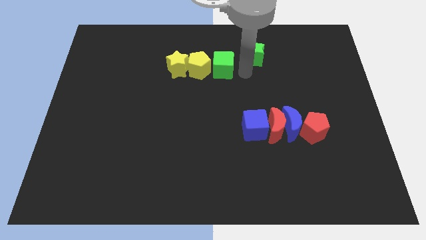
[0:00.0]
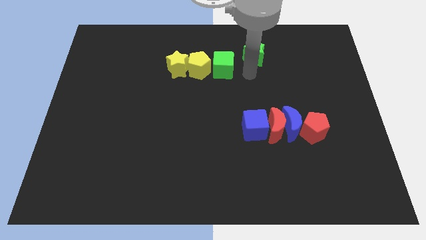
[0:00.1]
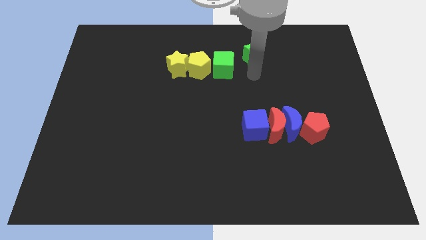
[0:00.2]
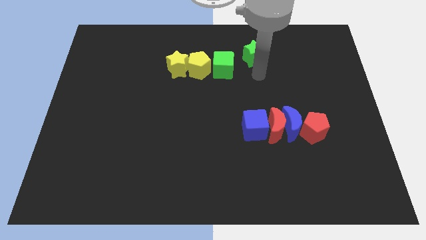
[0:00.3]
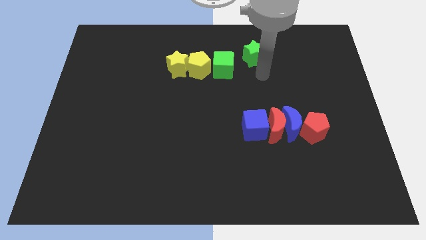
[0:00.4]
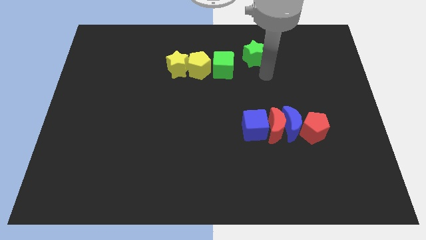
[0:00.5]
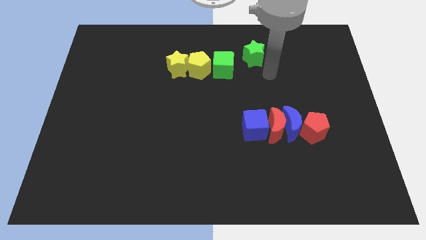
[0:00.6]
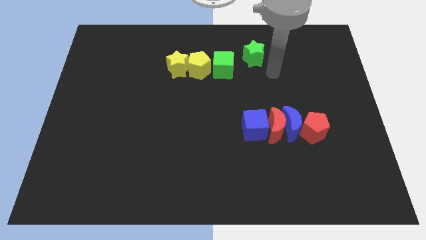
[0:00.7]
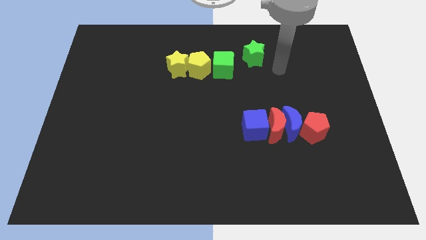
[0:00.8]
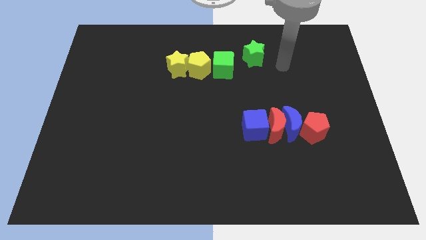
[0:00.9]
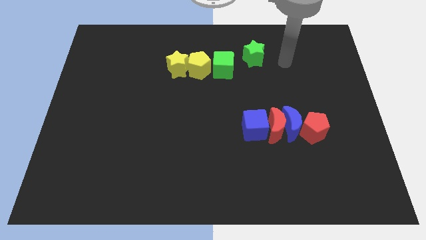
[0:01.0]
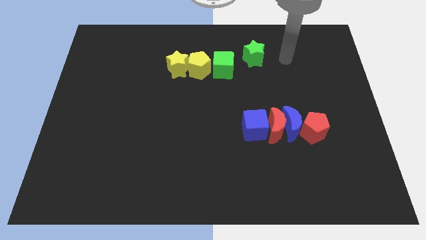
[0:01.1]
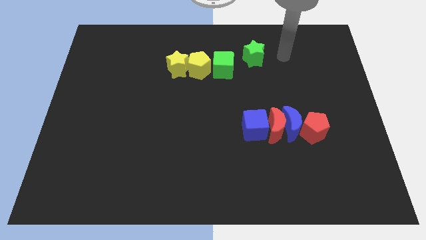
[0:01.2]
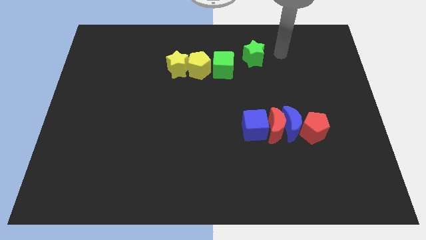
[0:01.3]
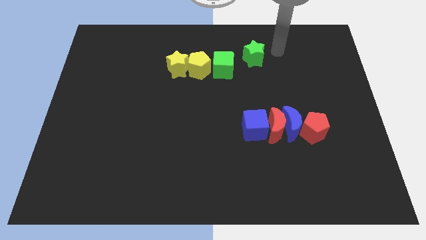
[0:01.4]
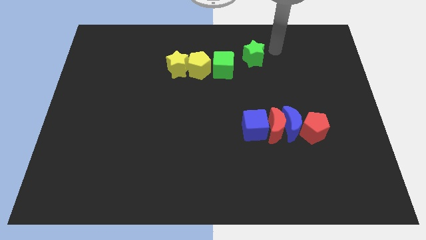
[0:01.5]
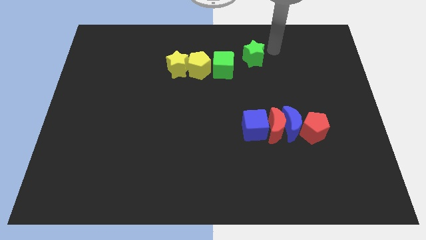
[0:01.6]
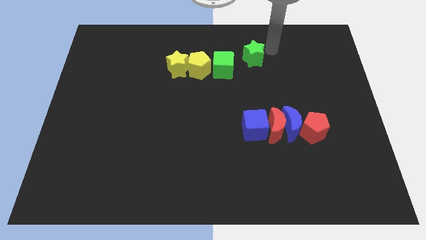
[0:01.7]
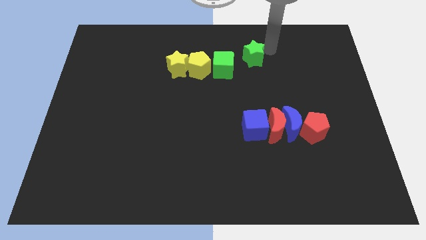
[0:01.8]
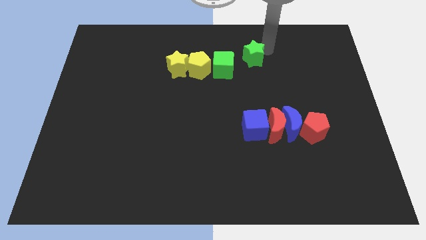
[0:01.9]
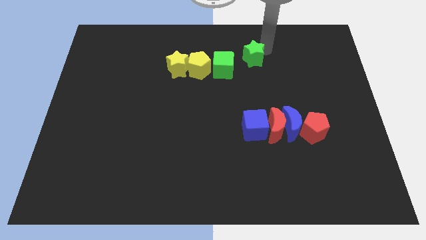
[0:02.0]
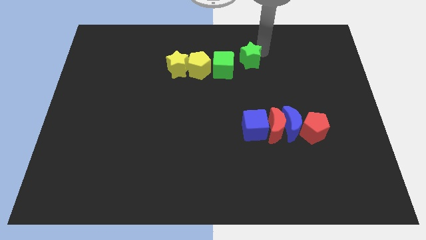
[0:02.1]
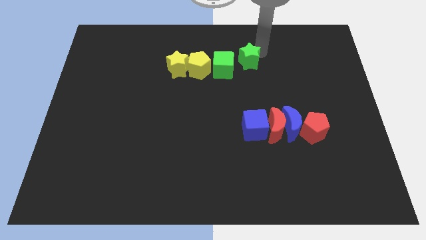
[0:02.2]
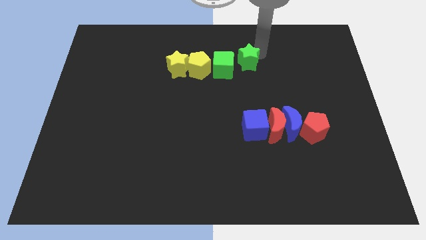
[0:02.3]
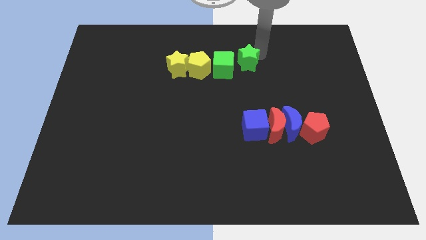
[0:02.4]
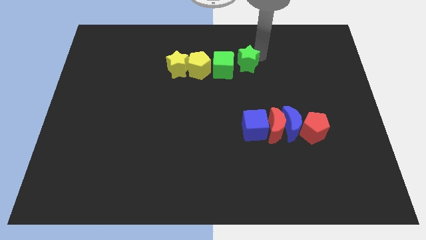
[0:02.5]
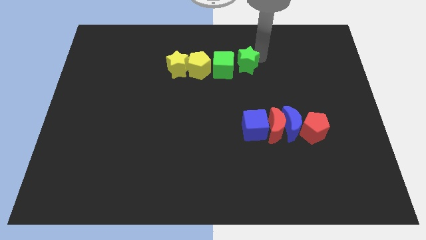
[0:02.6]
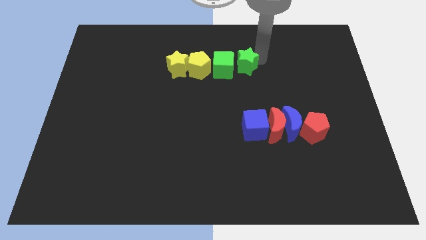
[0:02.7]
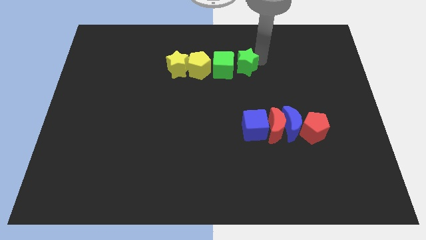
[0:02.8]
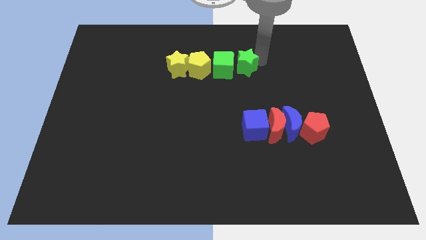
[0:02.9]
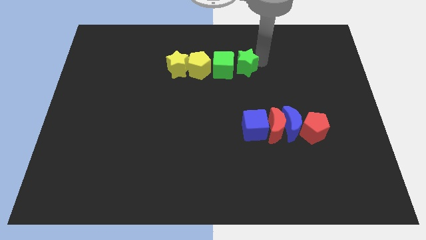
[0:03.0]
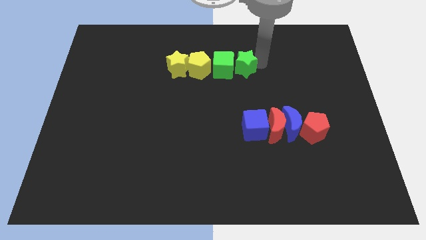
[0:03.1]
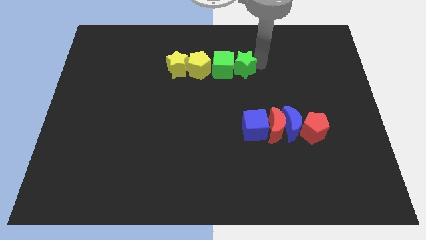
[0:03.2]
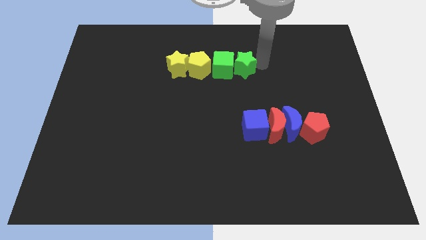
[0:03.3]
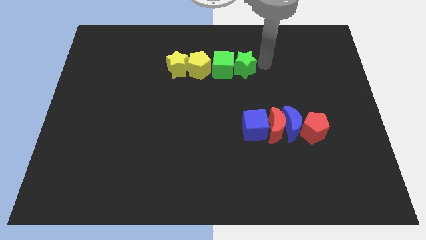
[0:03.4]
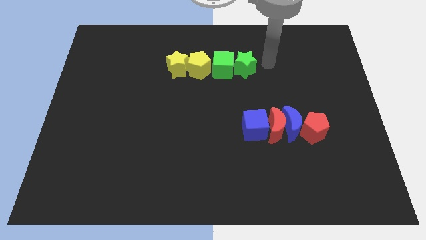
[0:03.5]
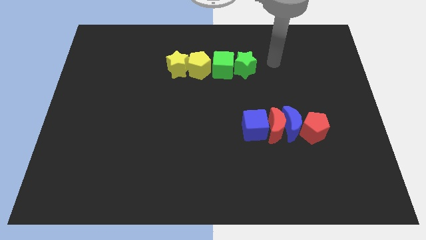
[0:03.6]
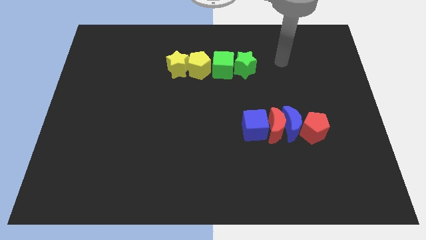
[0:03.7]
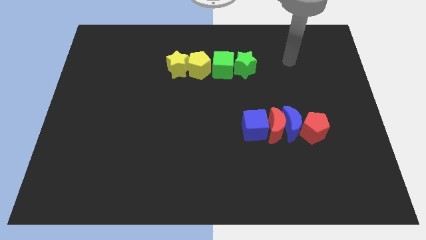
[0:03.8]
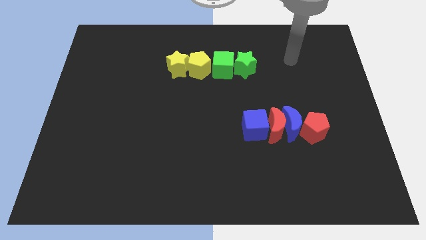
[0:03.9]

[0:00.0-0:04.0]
push the green star right to the green cube

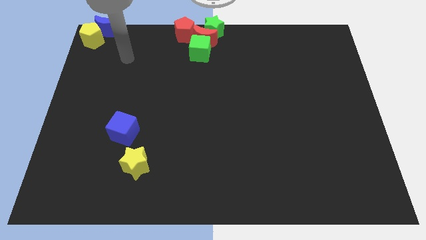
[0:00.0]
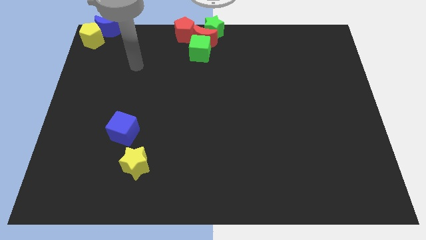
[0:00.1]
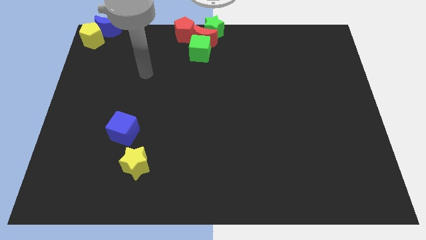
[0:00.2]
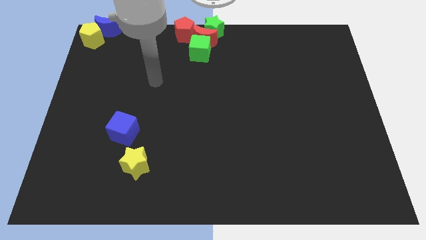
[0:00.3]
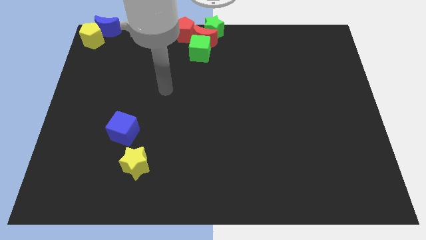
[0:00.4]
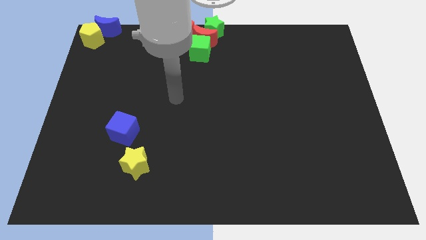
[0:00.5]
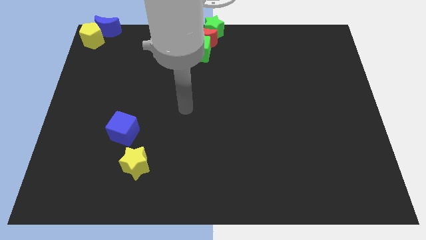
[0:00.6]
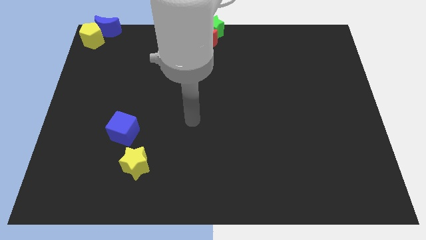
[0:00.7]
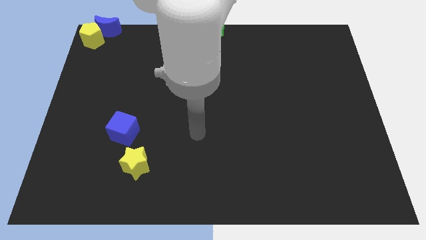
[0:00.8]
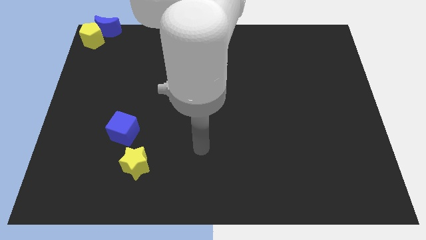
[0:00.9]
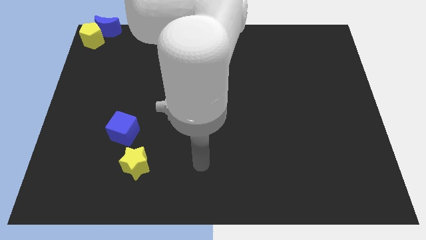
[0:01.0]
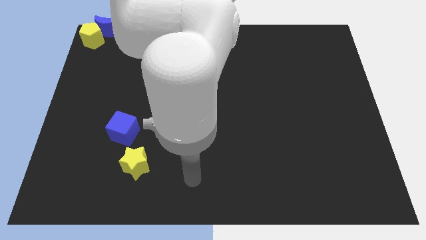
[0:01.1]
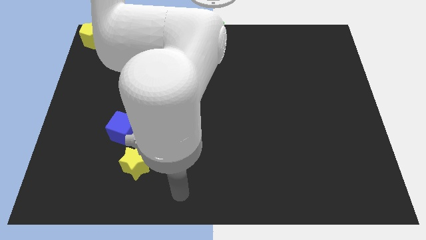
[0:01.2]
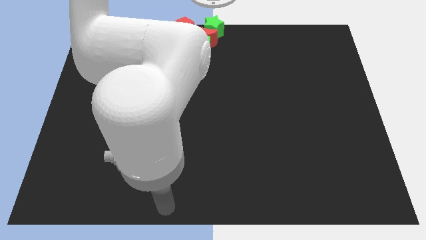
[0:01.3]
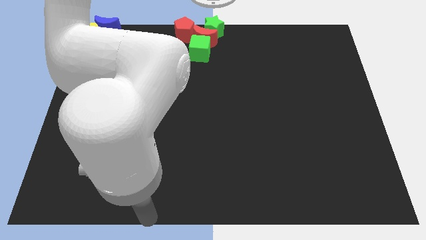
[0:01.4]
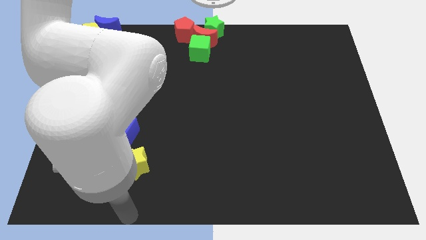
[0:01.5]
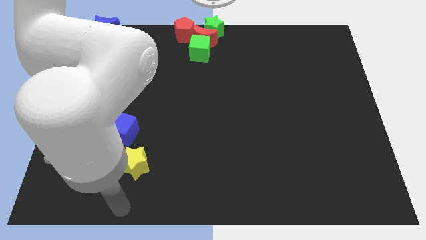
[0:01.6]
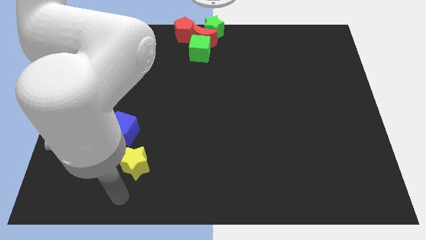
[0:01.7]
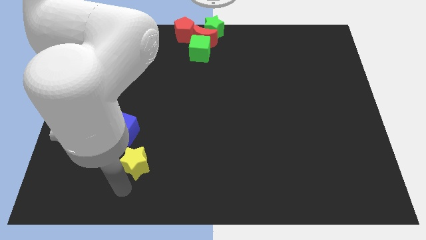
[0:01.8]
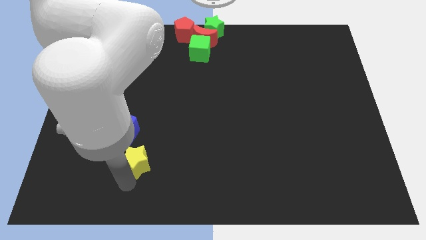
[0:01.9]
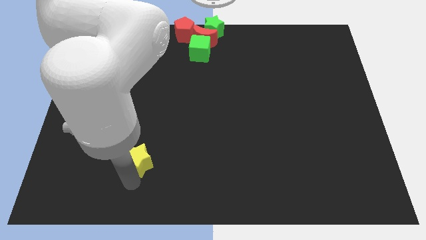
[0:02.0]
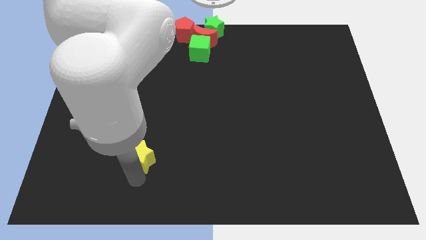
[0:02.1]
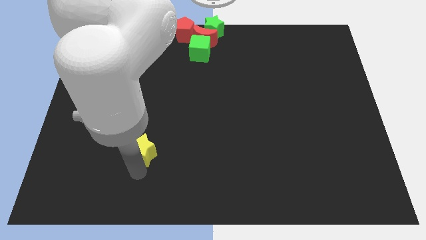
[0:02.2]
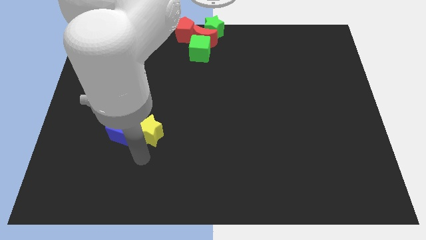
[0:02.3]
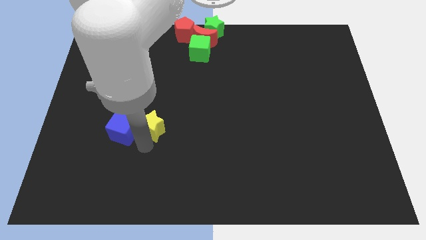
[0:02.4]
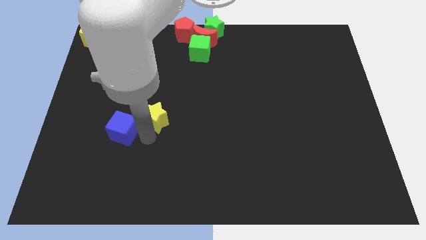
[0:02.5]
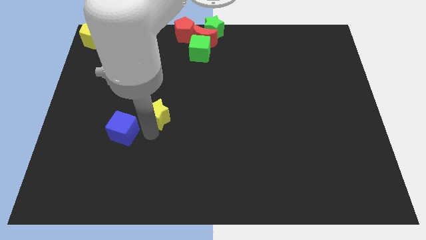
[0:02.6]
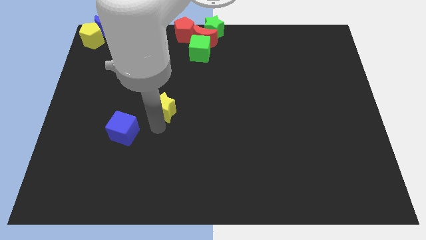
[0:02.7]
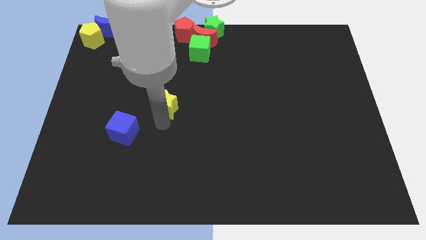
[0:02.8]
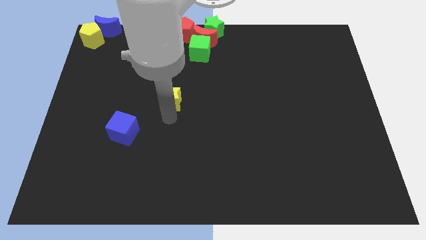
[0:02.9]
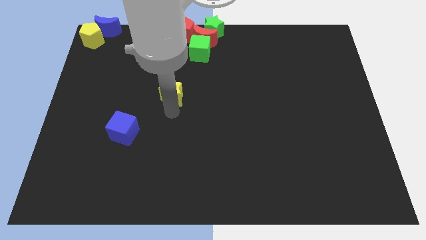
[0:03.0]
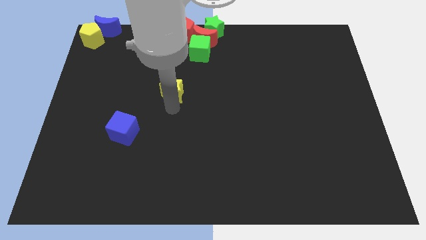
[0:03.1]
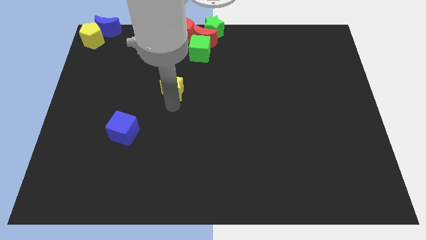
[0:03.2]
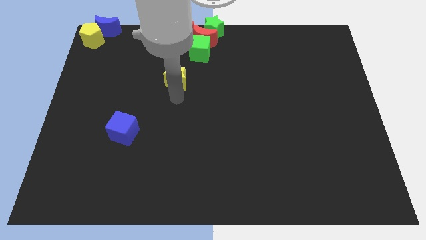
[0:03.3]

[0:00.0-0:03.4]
drag the yellow star to the top

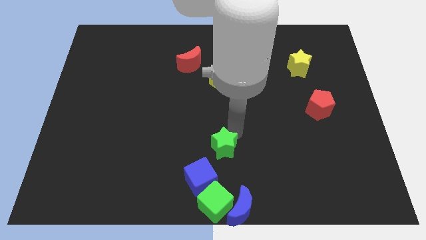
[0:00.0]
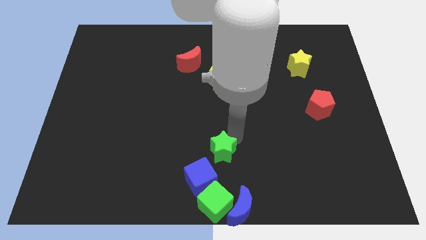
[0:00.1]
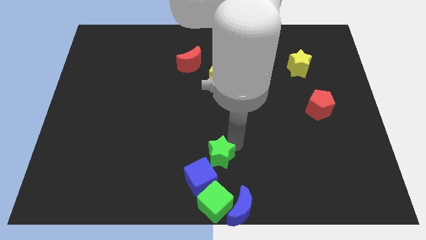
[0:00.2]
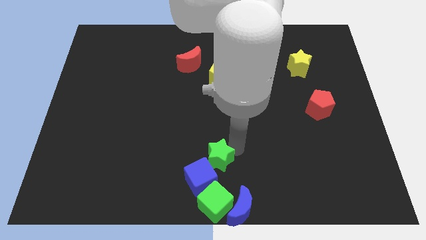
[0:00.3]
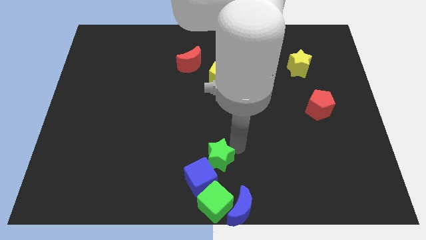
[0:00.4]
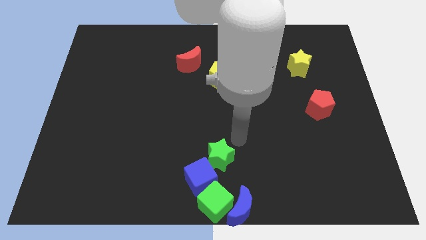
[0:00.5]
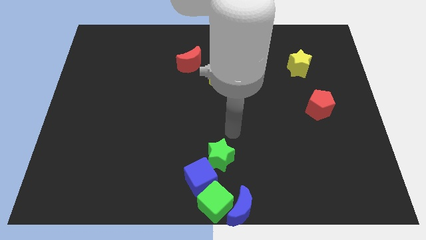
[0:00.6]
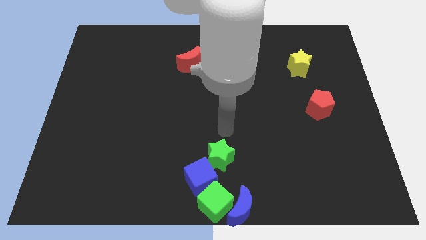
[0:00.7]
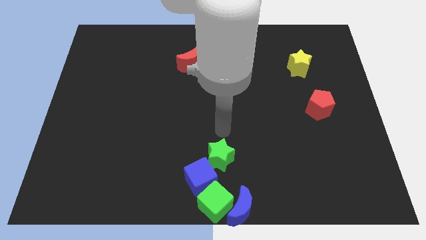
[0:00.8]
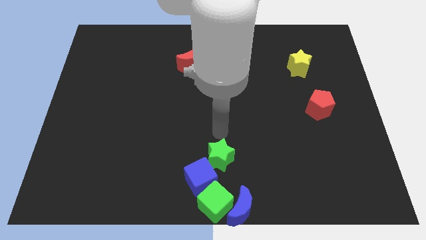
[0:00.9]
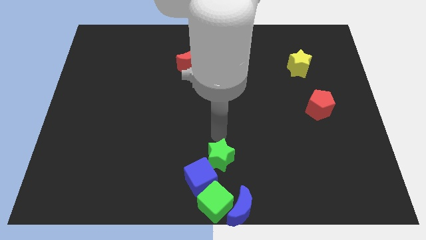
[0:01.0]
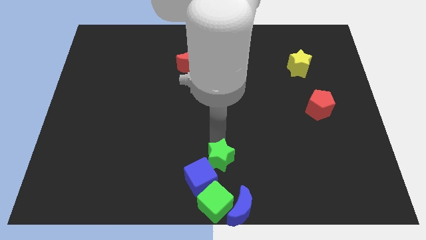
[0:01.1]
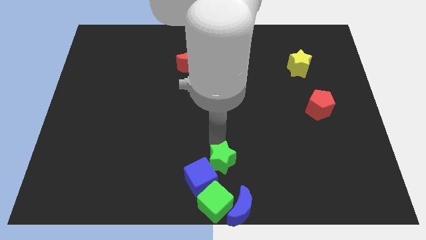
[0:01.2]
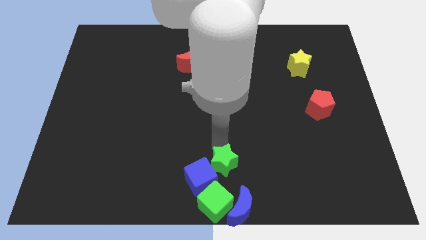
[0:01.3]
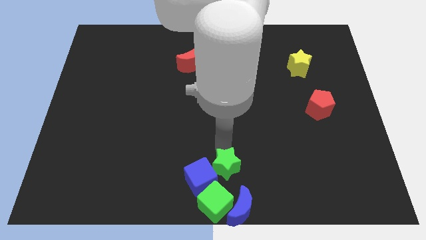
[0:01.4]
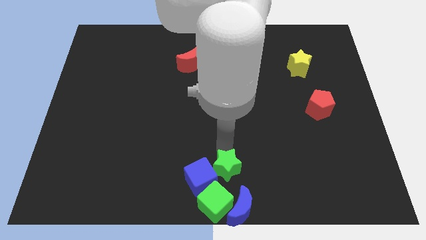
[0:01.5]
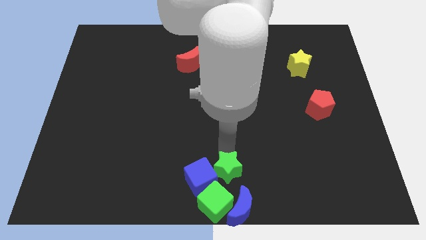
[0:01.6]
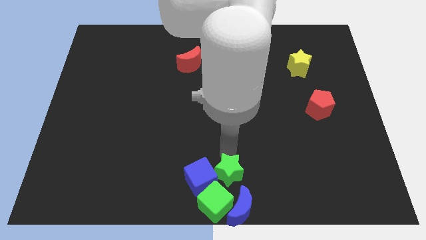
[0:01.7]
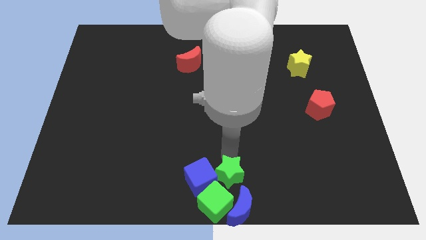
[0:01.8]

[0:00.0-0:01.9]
put the green star on the right side of the blue cube
